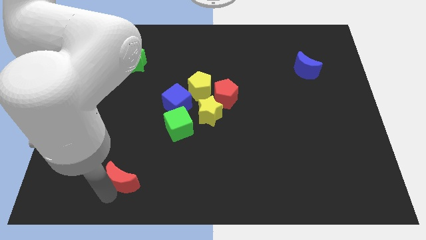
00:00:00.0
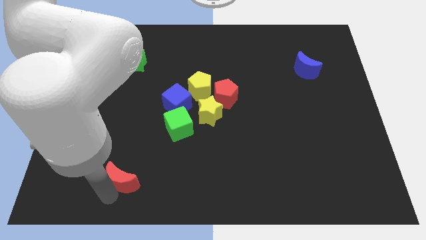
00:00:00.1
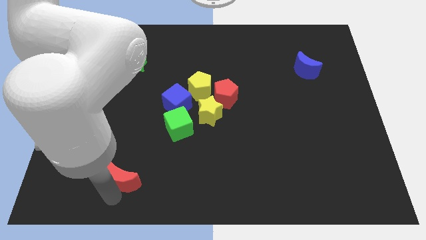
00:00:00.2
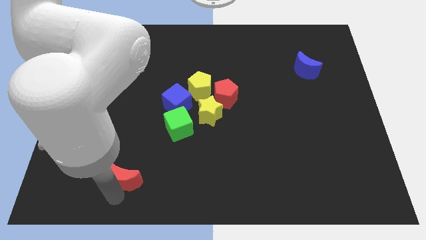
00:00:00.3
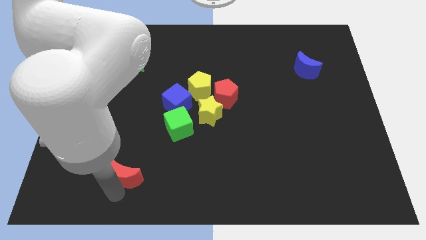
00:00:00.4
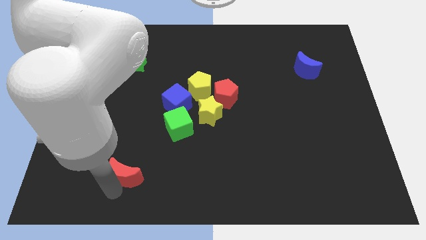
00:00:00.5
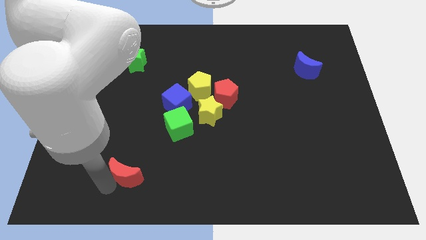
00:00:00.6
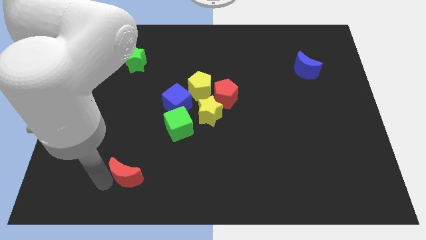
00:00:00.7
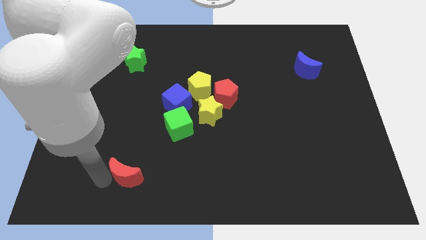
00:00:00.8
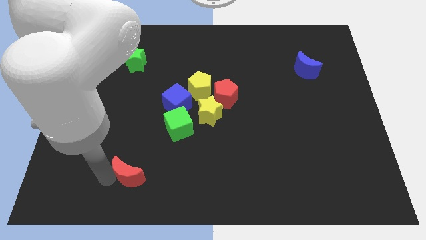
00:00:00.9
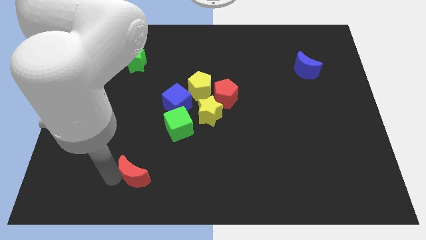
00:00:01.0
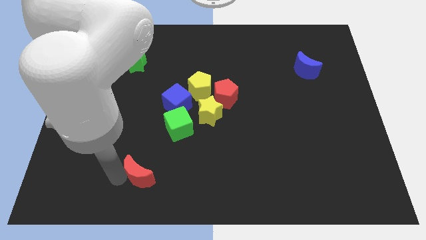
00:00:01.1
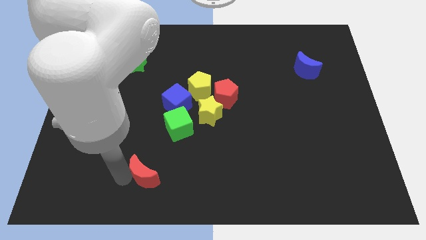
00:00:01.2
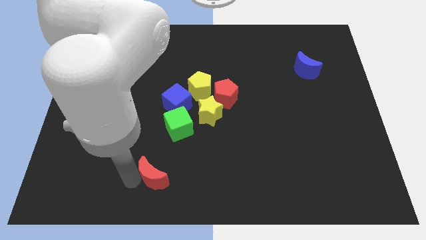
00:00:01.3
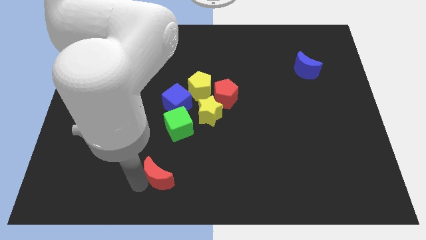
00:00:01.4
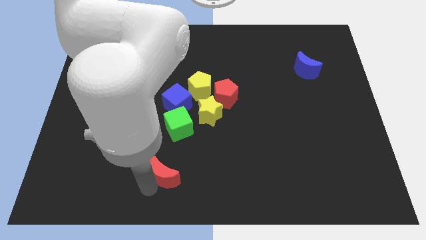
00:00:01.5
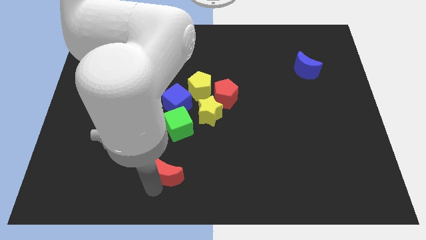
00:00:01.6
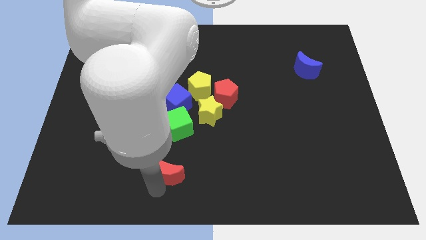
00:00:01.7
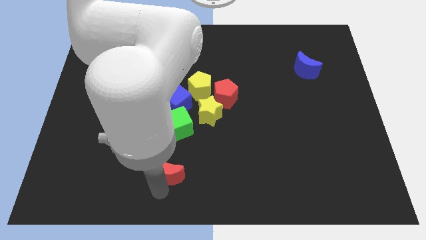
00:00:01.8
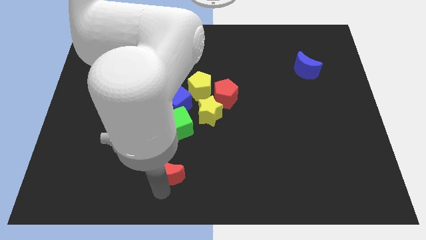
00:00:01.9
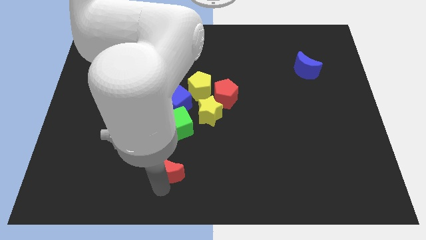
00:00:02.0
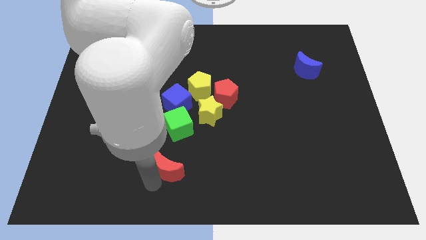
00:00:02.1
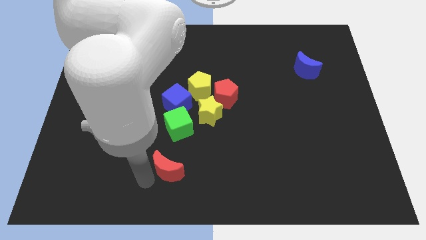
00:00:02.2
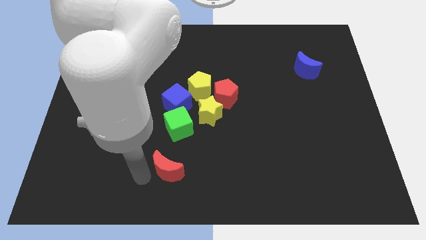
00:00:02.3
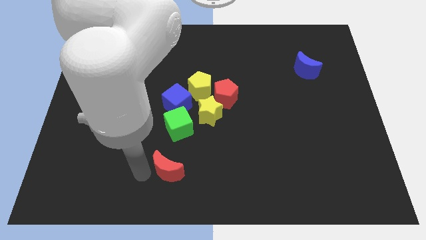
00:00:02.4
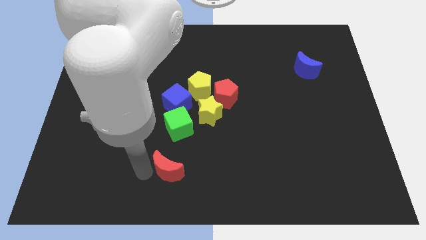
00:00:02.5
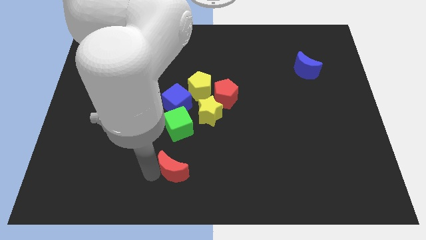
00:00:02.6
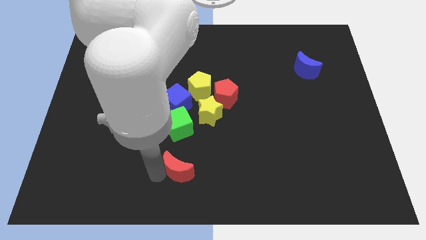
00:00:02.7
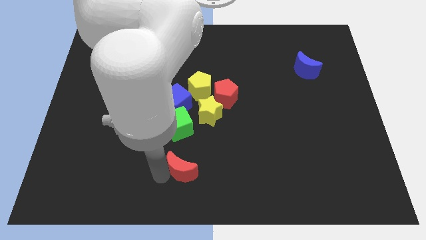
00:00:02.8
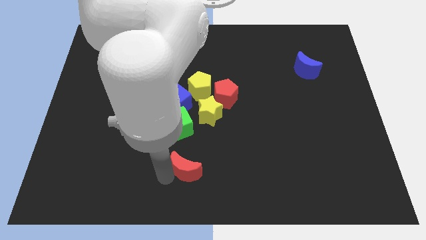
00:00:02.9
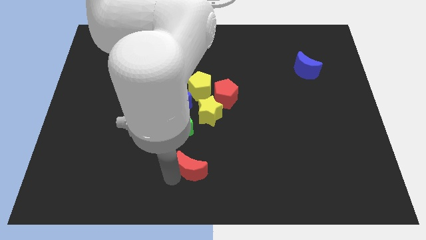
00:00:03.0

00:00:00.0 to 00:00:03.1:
move the red moon below the green cube

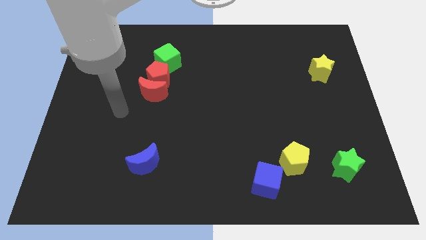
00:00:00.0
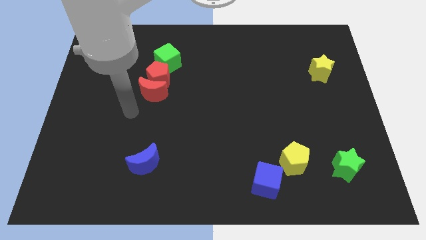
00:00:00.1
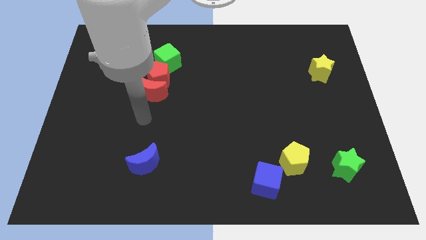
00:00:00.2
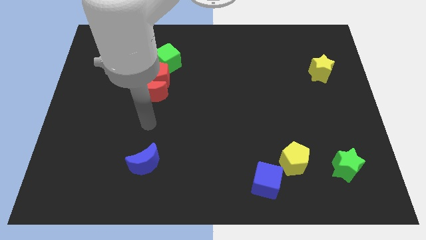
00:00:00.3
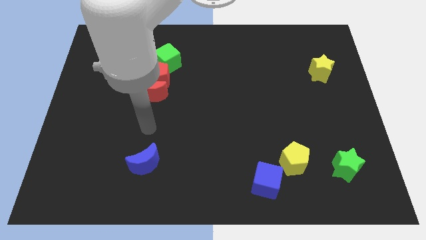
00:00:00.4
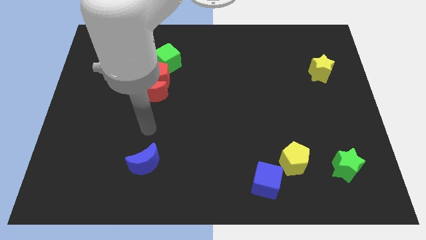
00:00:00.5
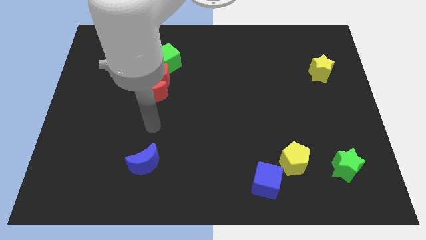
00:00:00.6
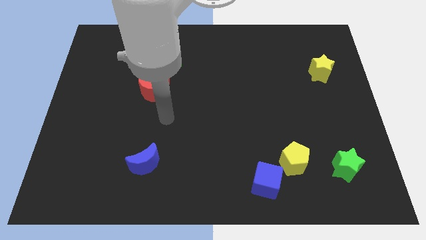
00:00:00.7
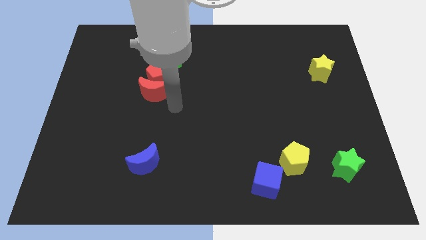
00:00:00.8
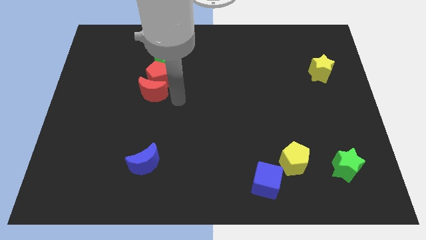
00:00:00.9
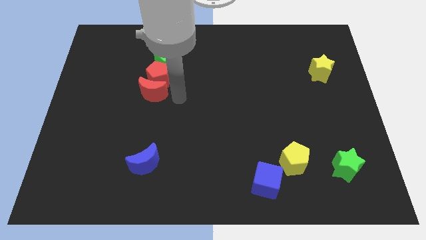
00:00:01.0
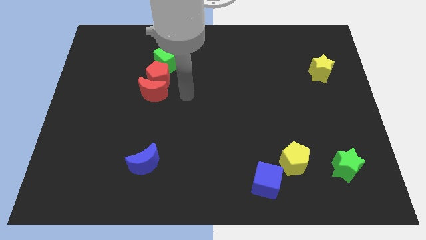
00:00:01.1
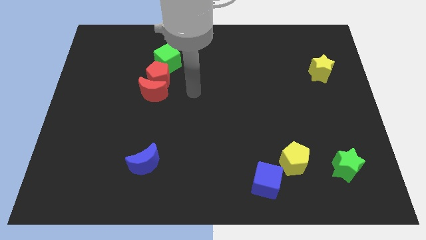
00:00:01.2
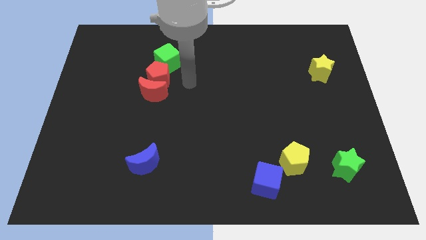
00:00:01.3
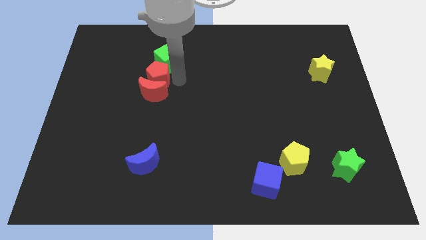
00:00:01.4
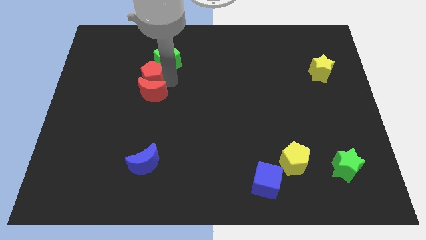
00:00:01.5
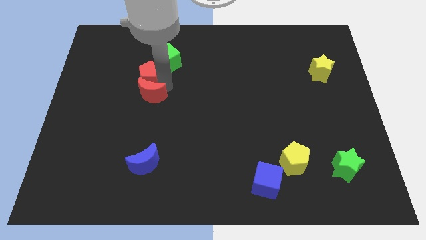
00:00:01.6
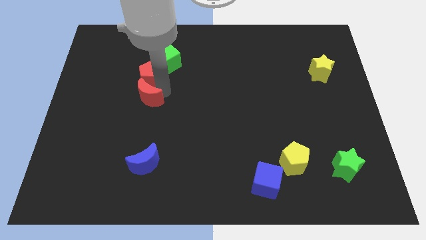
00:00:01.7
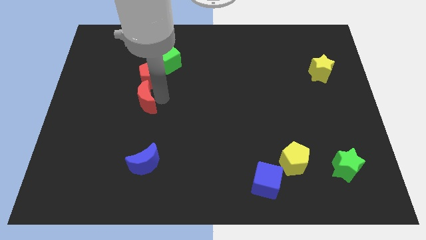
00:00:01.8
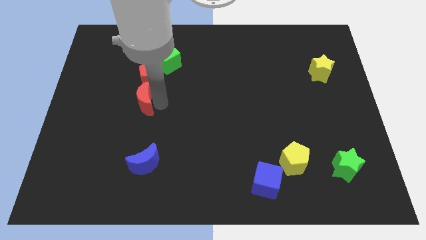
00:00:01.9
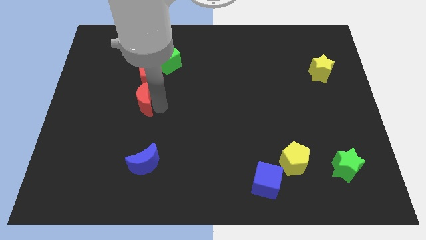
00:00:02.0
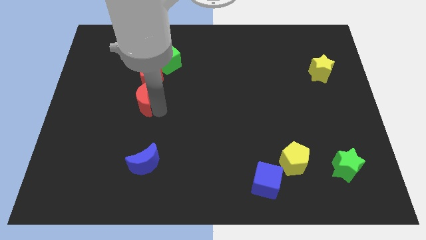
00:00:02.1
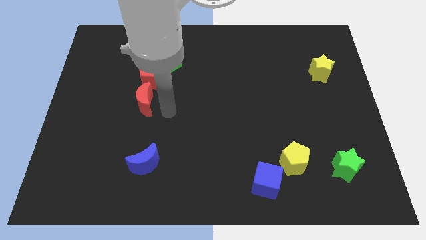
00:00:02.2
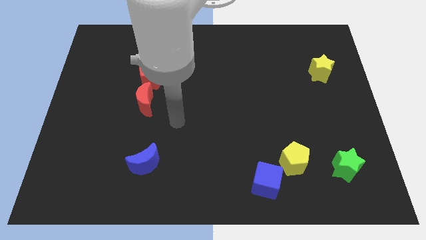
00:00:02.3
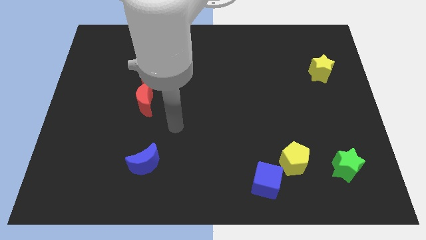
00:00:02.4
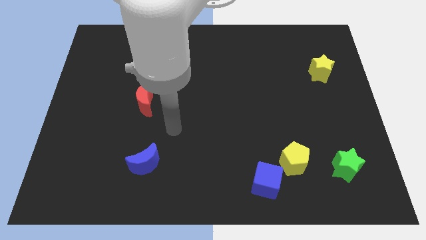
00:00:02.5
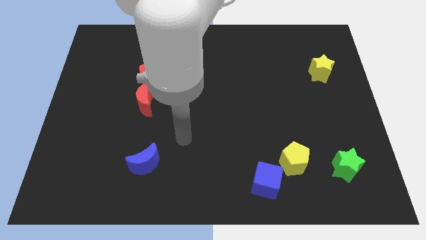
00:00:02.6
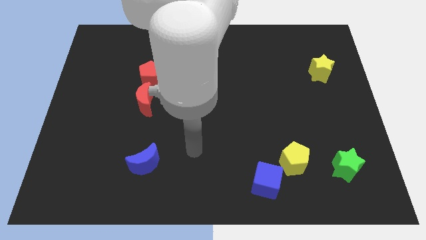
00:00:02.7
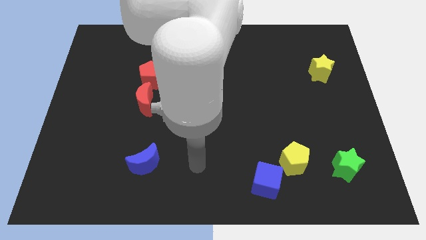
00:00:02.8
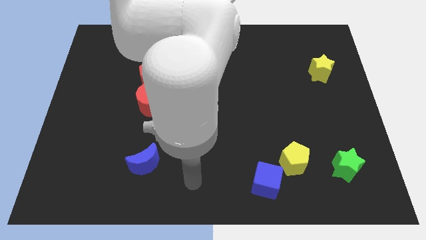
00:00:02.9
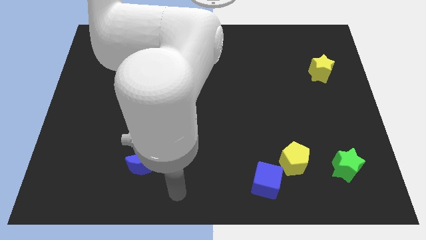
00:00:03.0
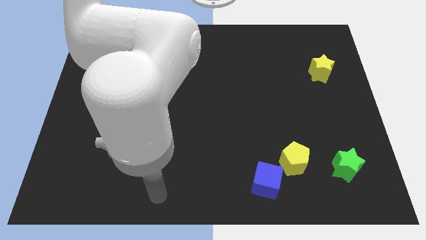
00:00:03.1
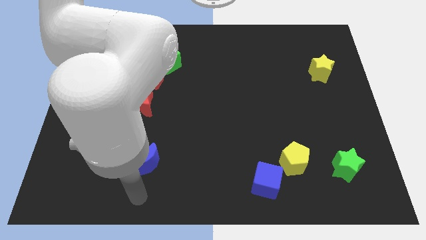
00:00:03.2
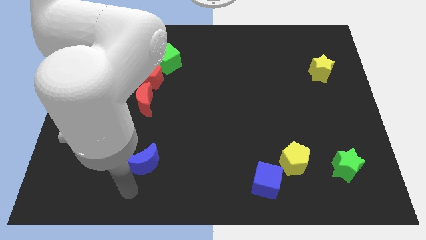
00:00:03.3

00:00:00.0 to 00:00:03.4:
place your arm below blue crescent

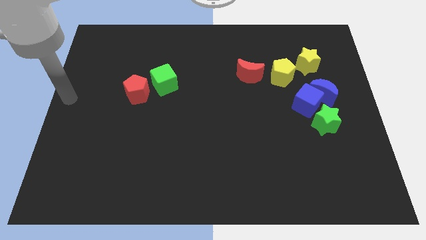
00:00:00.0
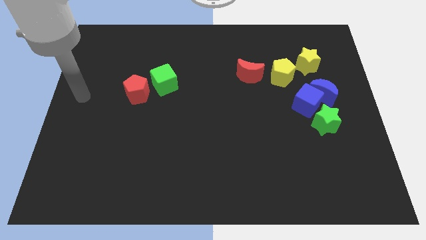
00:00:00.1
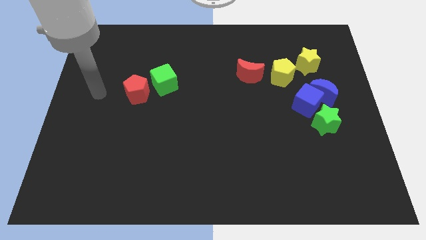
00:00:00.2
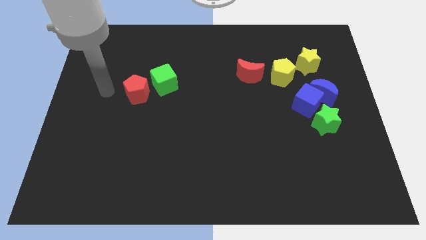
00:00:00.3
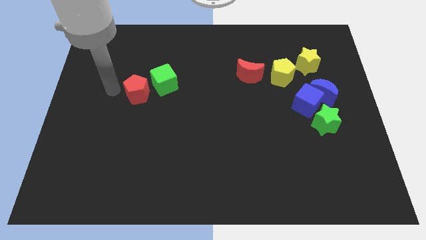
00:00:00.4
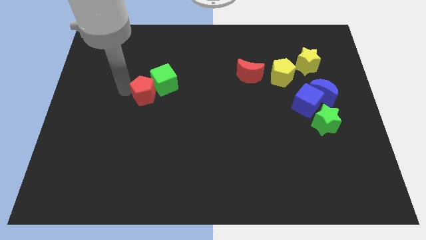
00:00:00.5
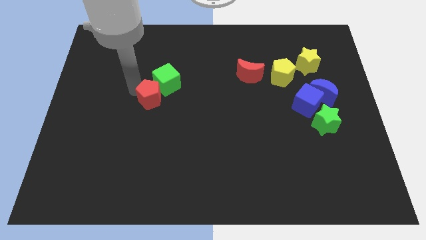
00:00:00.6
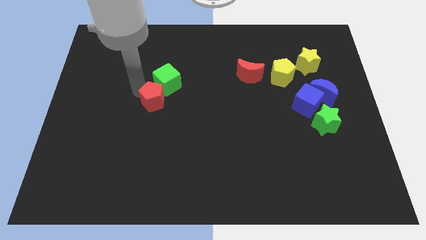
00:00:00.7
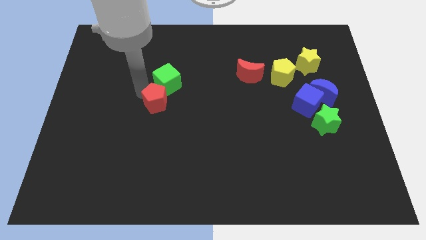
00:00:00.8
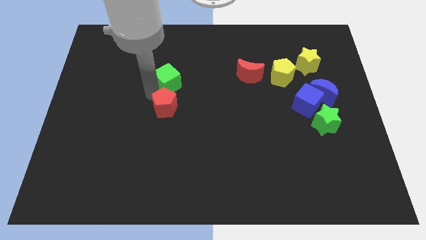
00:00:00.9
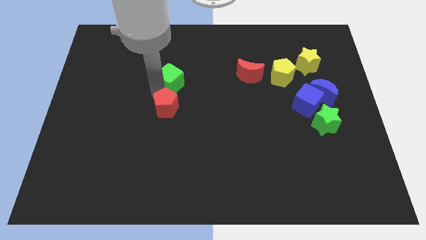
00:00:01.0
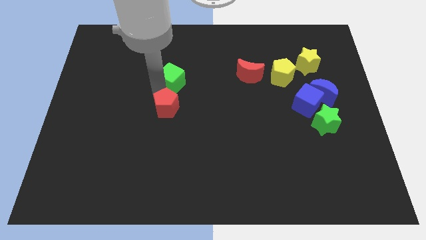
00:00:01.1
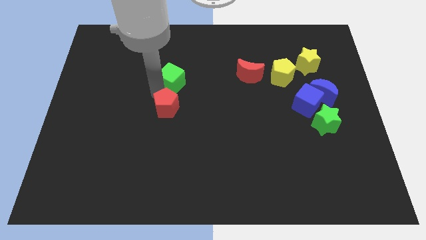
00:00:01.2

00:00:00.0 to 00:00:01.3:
place red pentagon below green cube

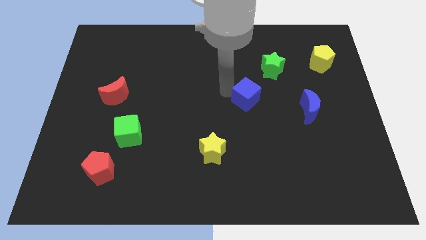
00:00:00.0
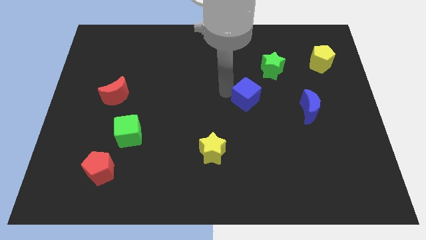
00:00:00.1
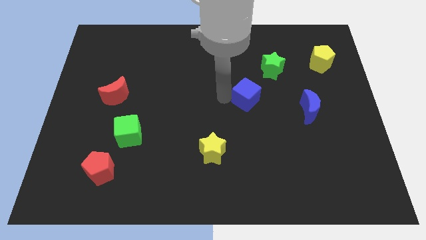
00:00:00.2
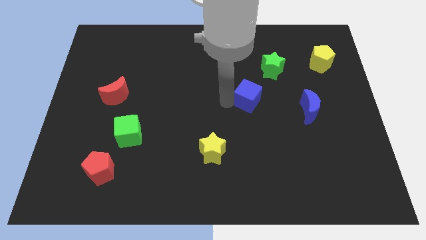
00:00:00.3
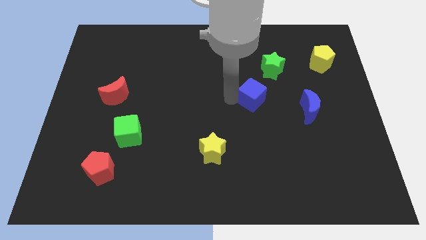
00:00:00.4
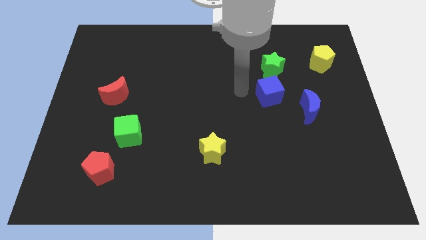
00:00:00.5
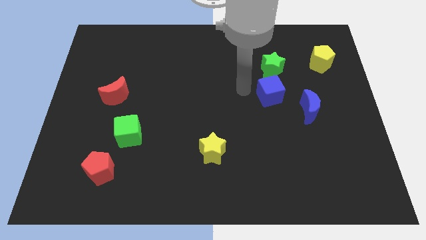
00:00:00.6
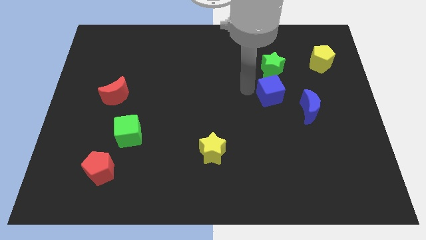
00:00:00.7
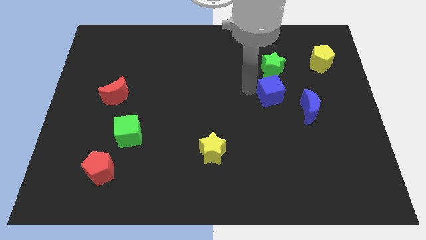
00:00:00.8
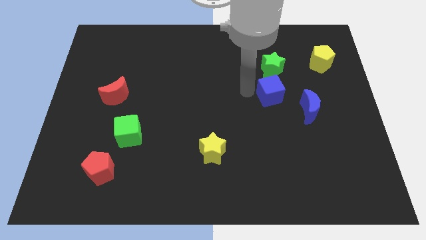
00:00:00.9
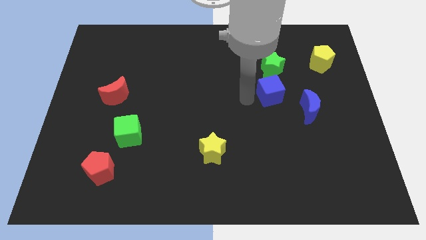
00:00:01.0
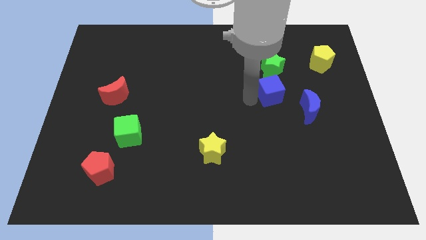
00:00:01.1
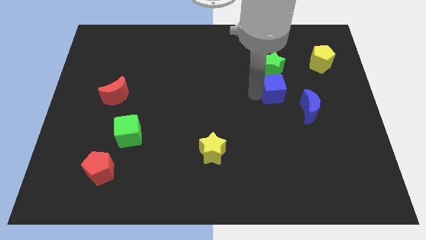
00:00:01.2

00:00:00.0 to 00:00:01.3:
place blue cube at the bottom of green star
